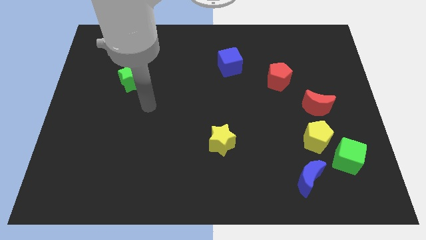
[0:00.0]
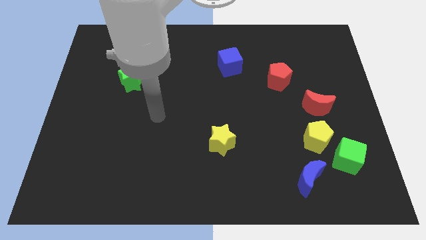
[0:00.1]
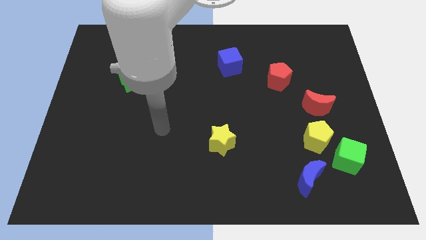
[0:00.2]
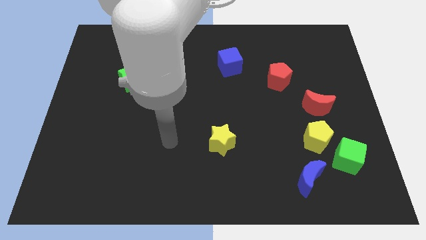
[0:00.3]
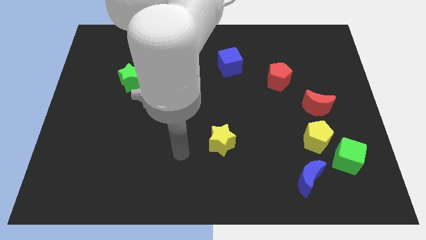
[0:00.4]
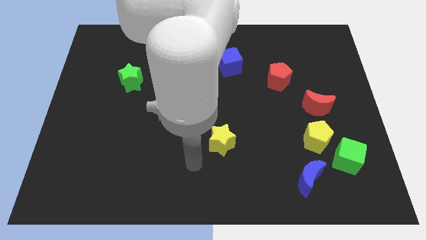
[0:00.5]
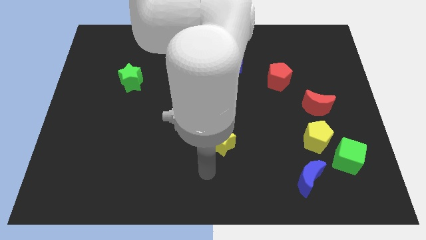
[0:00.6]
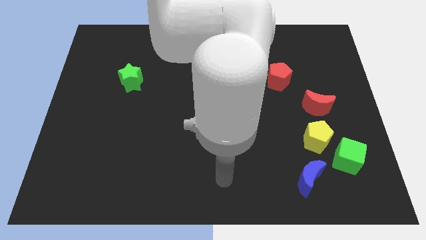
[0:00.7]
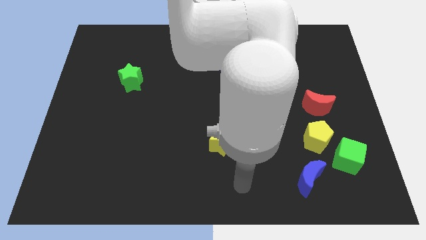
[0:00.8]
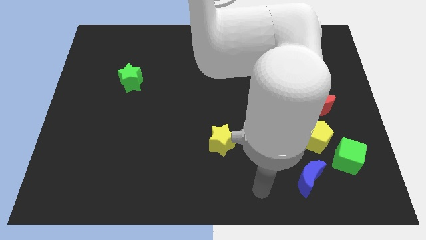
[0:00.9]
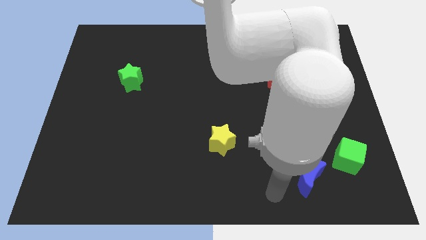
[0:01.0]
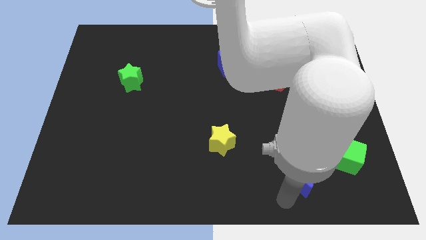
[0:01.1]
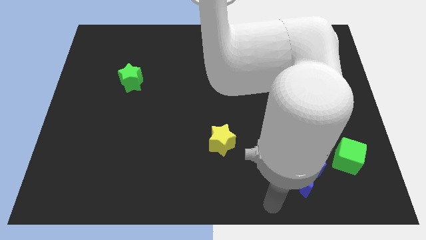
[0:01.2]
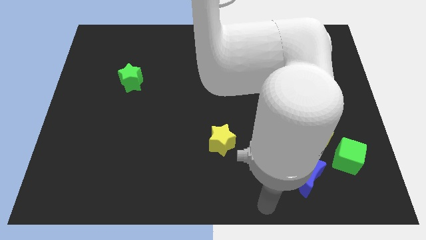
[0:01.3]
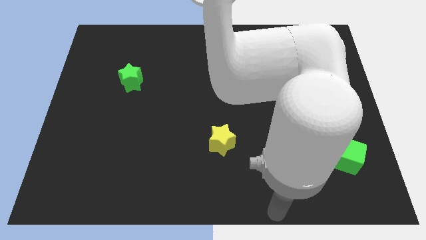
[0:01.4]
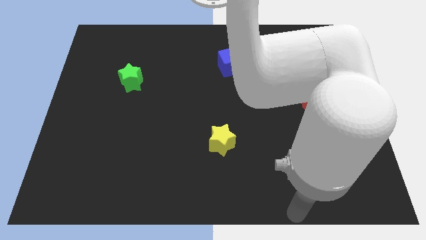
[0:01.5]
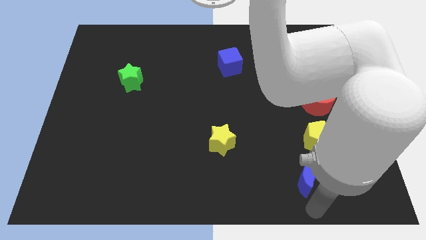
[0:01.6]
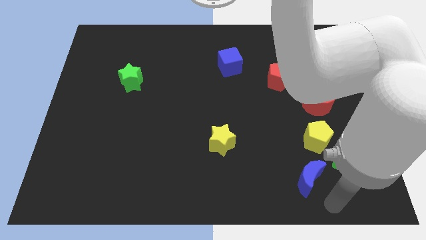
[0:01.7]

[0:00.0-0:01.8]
move your arm close to the blue moon

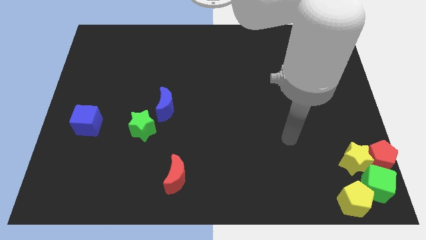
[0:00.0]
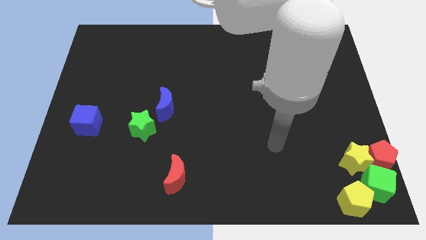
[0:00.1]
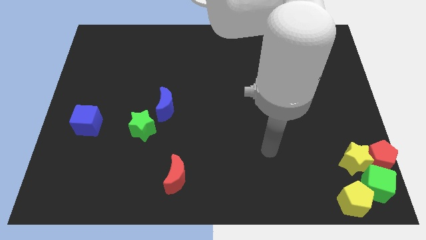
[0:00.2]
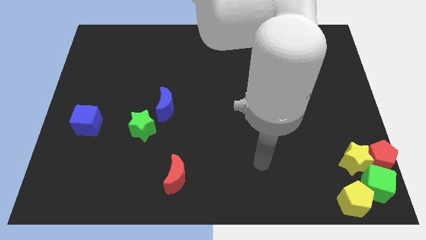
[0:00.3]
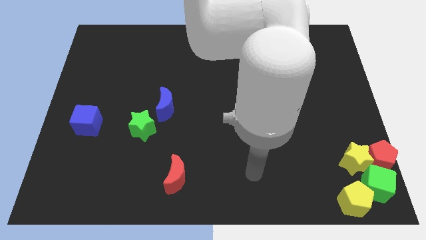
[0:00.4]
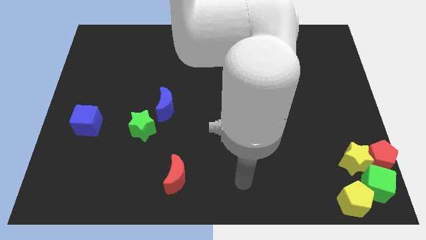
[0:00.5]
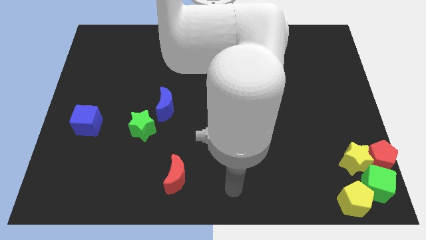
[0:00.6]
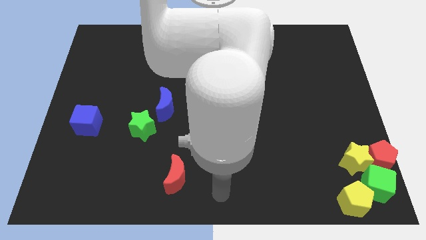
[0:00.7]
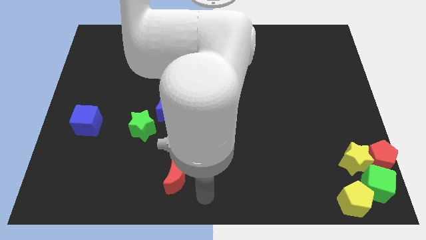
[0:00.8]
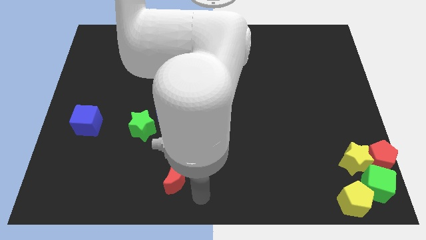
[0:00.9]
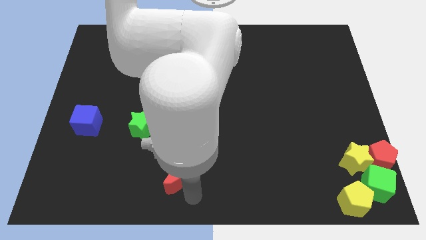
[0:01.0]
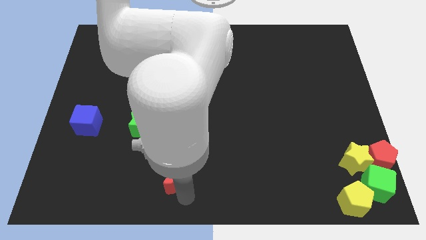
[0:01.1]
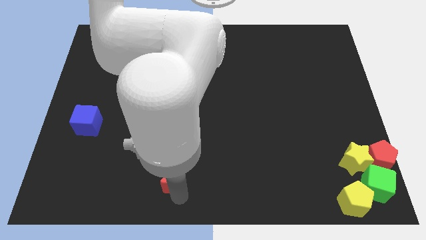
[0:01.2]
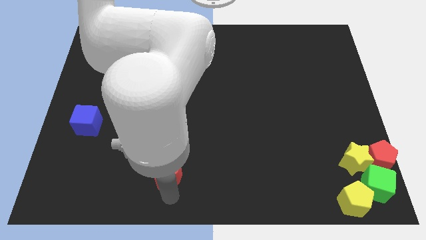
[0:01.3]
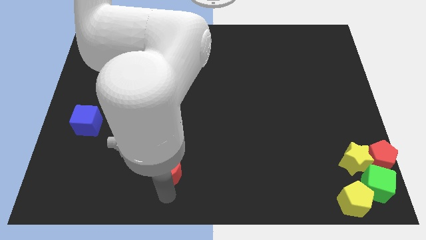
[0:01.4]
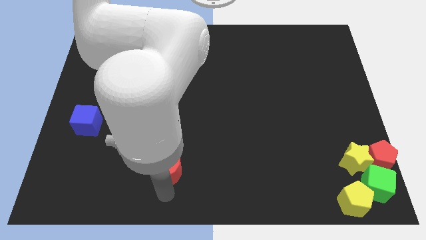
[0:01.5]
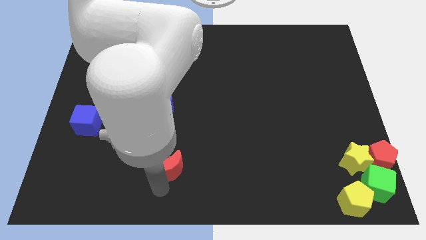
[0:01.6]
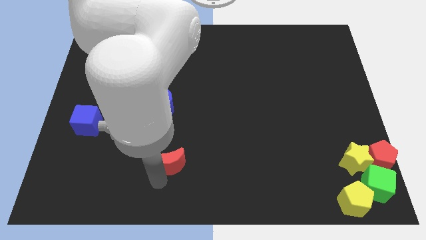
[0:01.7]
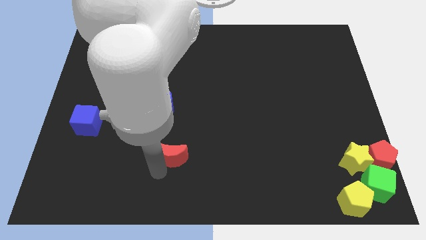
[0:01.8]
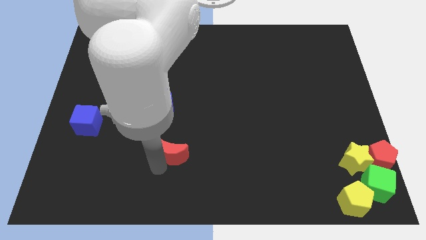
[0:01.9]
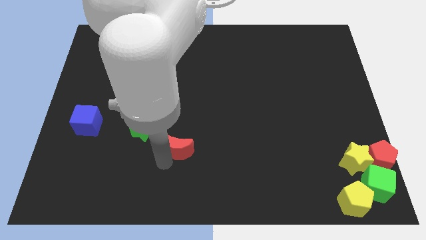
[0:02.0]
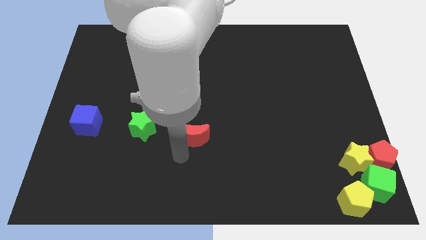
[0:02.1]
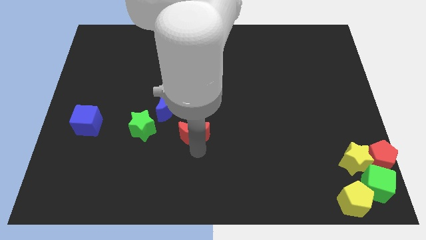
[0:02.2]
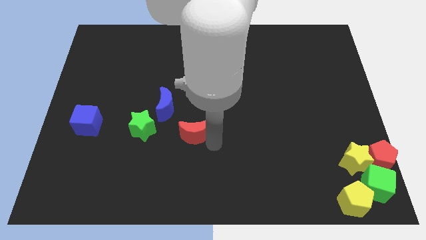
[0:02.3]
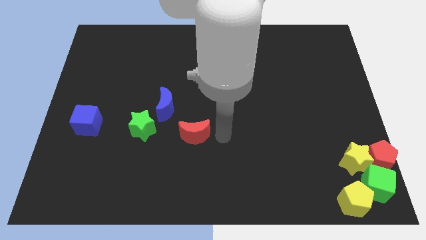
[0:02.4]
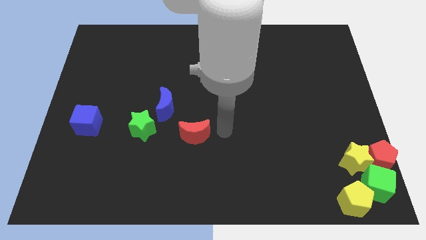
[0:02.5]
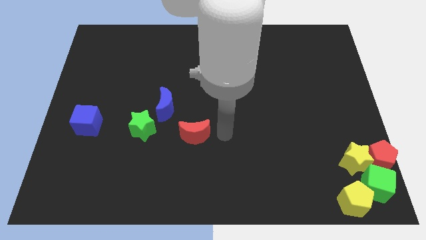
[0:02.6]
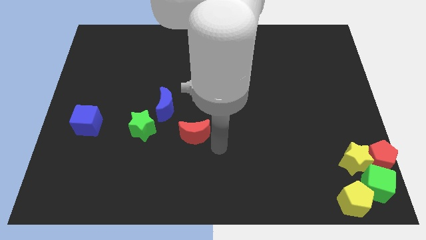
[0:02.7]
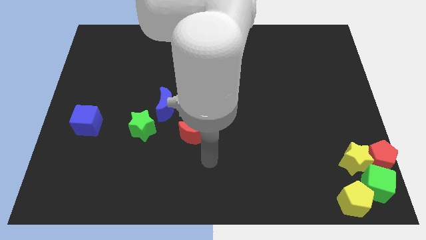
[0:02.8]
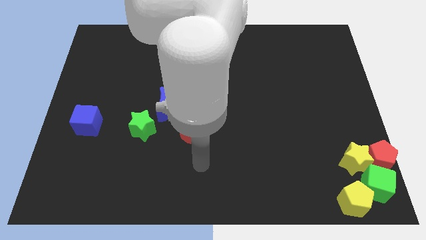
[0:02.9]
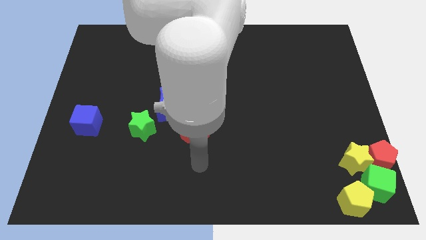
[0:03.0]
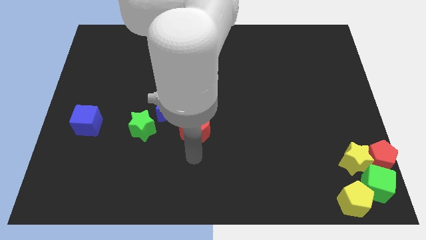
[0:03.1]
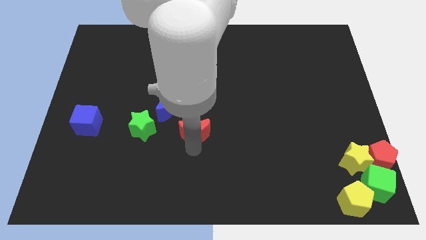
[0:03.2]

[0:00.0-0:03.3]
place the red crescent to the right of the green star

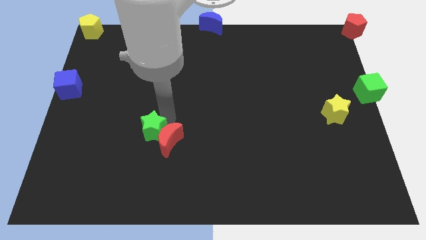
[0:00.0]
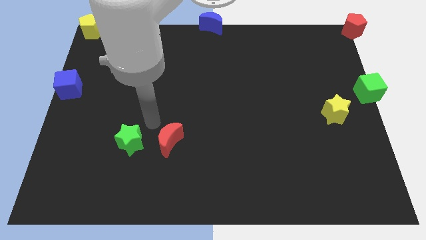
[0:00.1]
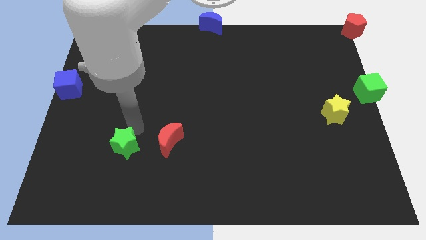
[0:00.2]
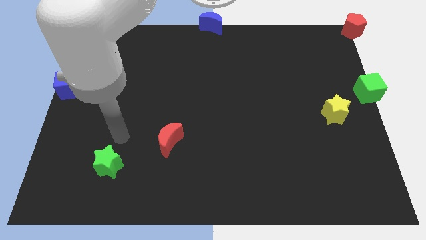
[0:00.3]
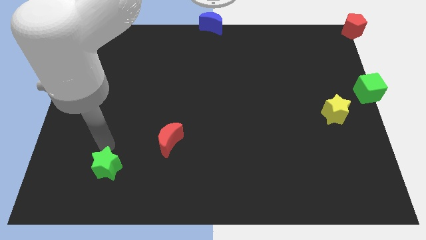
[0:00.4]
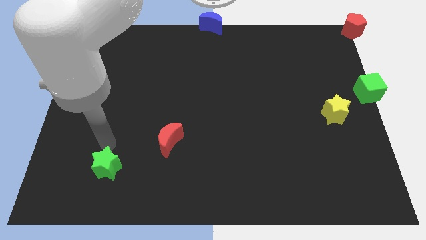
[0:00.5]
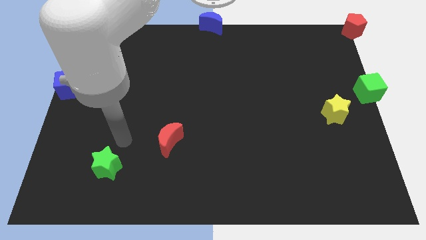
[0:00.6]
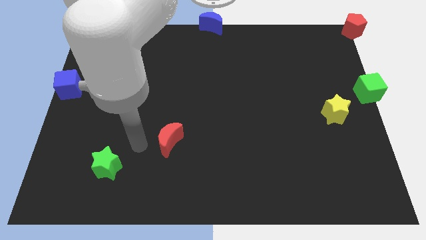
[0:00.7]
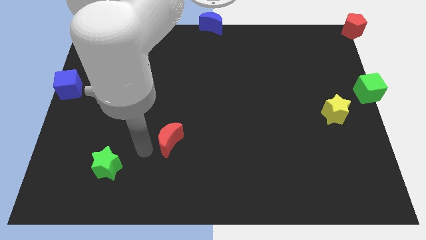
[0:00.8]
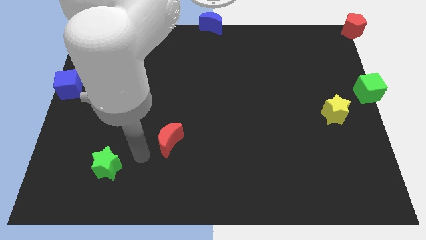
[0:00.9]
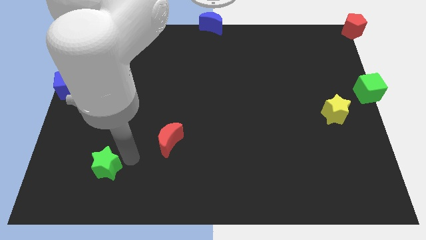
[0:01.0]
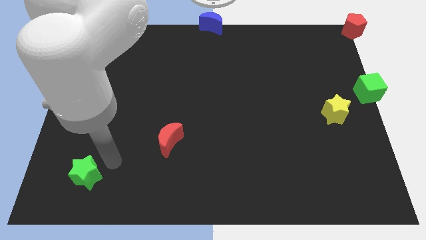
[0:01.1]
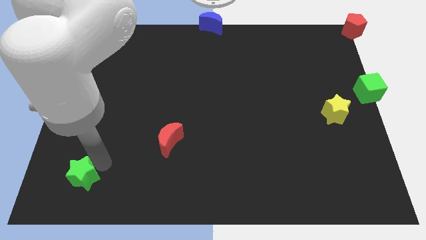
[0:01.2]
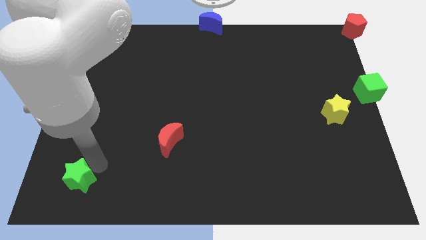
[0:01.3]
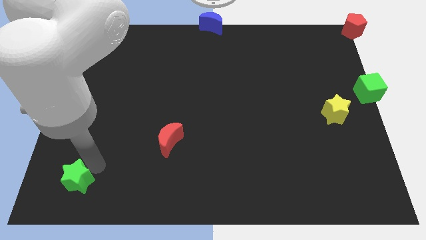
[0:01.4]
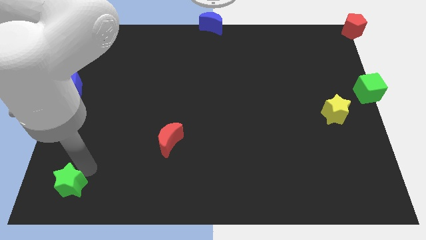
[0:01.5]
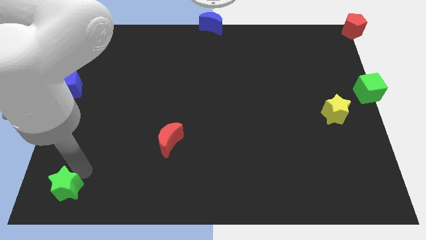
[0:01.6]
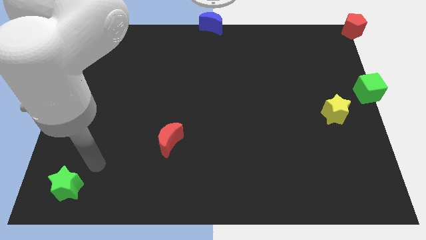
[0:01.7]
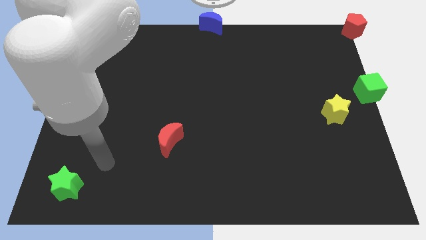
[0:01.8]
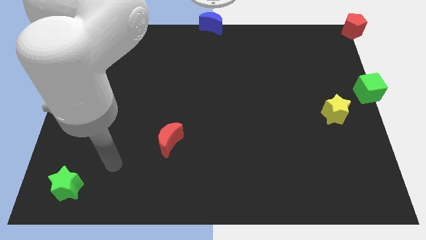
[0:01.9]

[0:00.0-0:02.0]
move the green star to bottom left side of the board

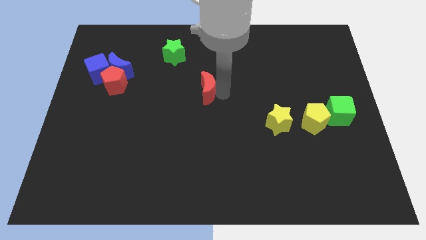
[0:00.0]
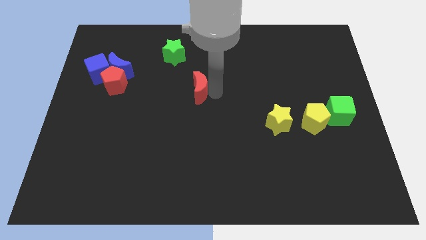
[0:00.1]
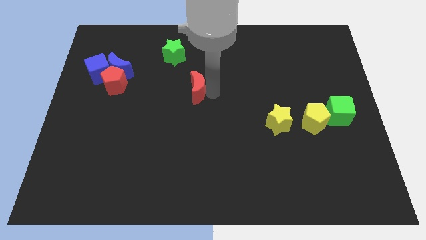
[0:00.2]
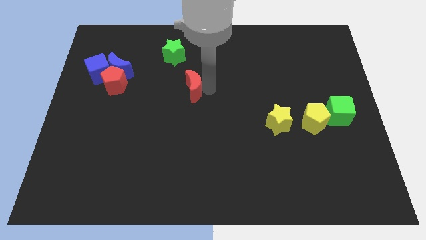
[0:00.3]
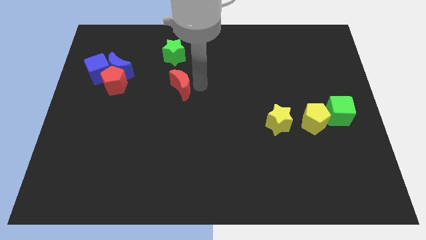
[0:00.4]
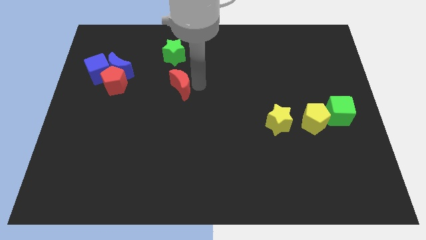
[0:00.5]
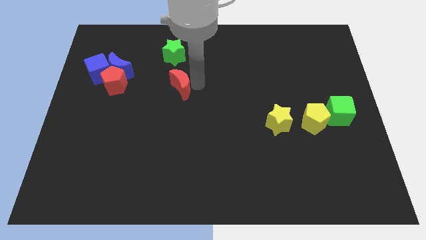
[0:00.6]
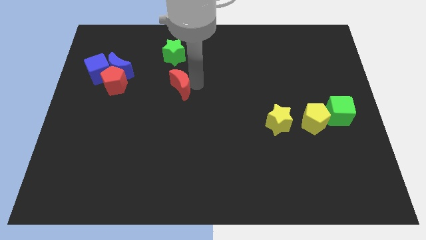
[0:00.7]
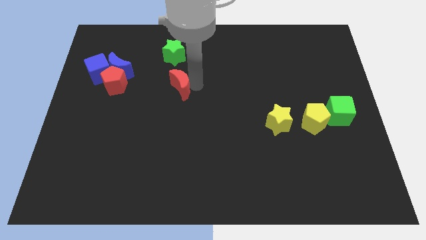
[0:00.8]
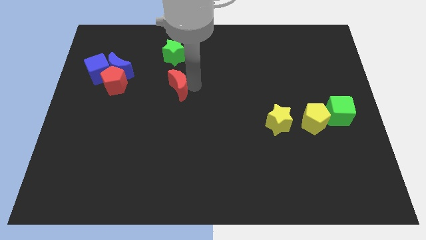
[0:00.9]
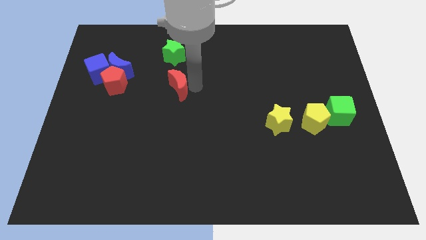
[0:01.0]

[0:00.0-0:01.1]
place red crescent below green star

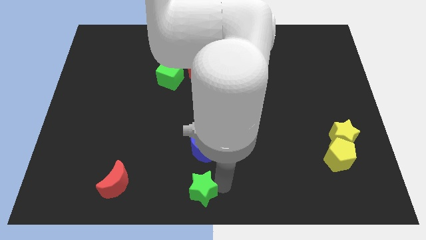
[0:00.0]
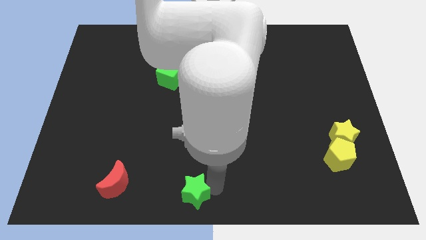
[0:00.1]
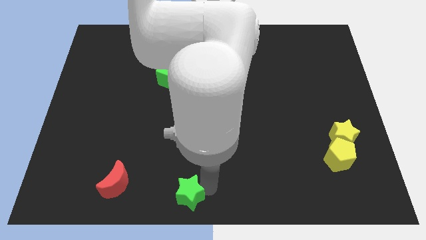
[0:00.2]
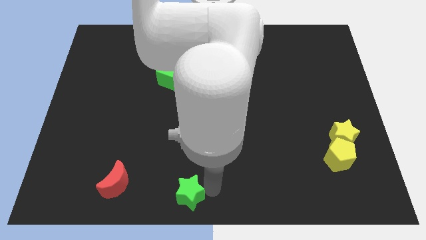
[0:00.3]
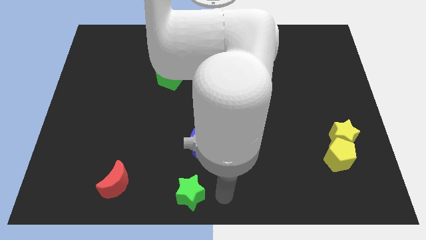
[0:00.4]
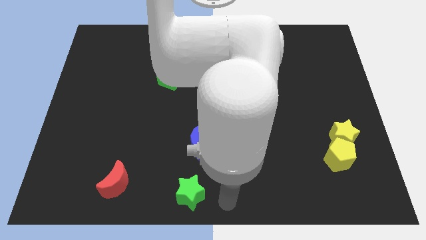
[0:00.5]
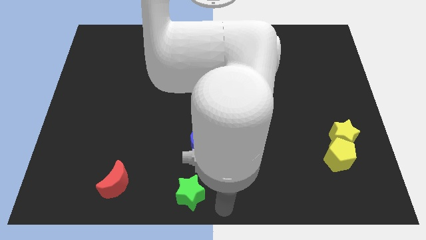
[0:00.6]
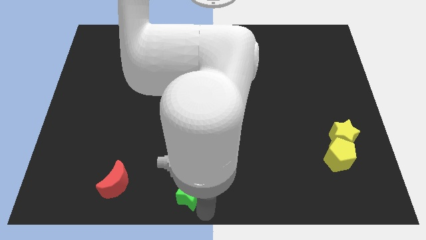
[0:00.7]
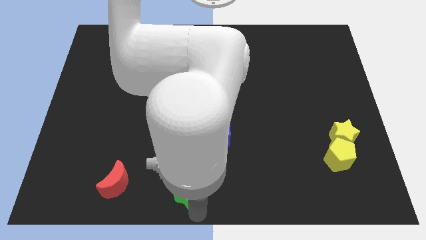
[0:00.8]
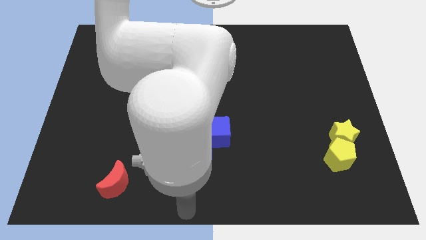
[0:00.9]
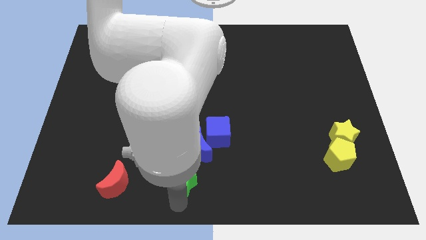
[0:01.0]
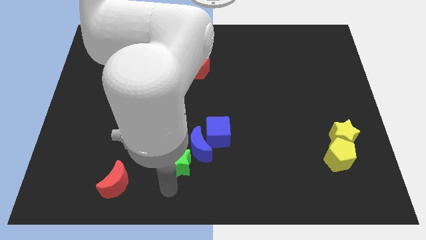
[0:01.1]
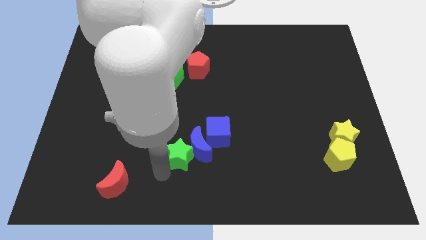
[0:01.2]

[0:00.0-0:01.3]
move the green star at the bottom left side of the blue crescent
